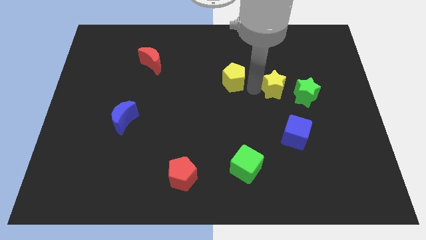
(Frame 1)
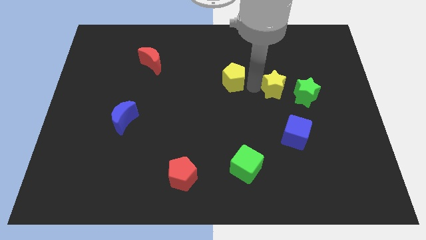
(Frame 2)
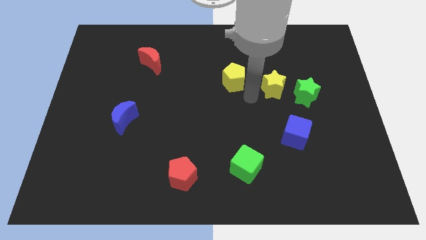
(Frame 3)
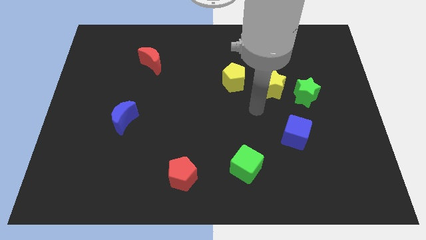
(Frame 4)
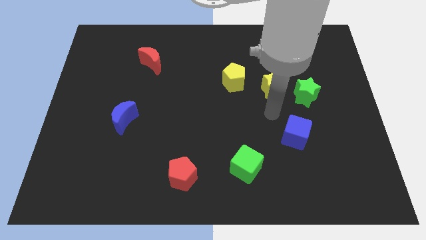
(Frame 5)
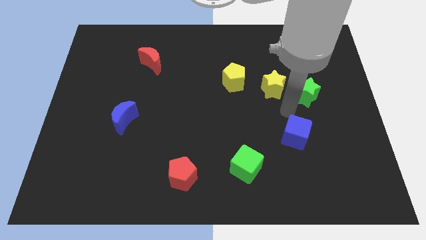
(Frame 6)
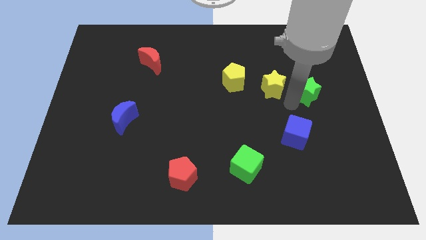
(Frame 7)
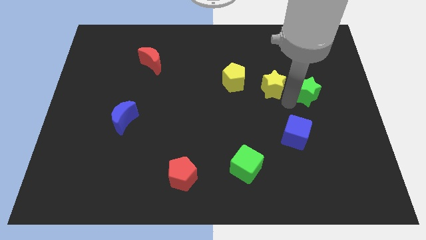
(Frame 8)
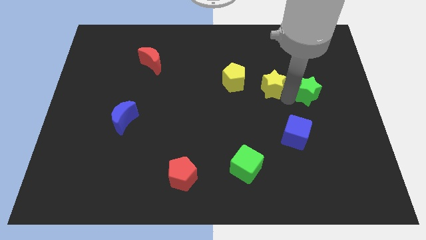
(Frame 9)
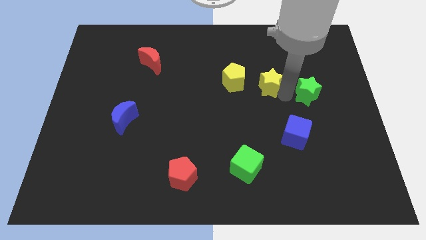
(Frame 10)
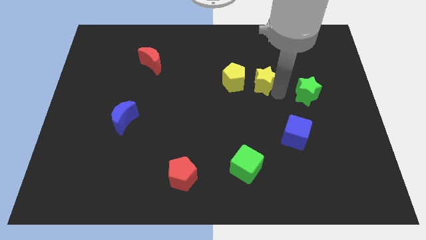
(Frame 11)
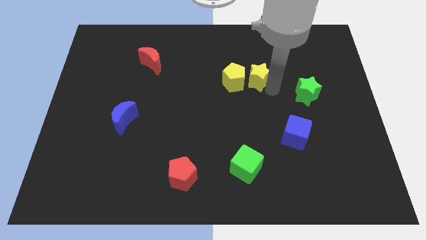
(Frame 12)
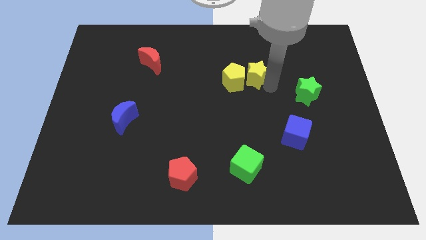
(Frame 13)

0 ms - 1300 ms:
push the yellow star horizontal to the right of the yellow pentagon

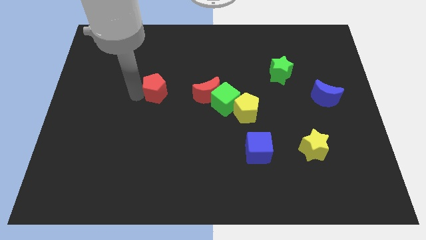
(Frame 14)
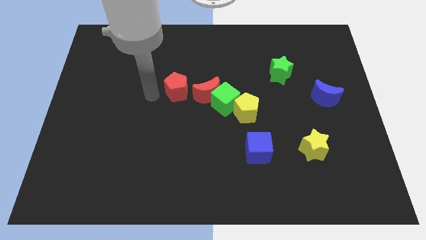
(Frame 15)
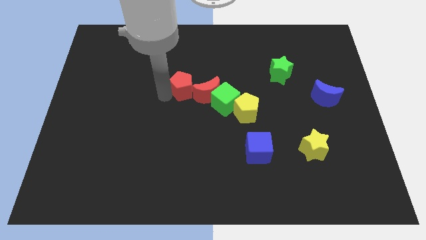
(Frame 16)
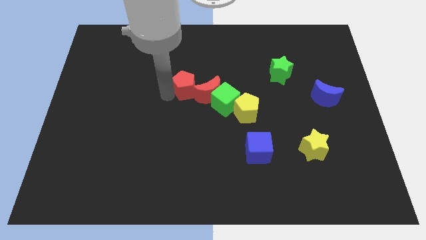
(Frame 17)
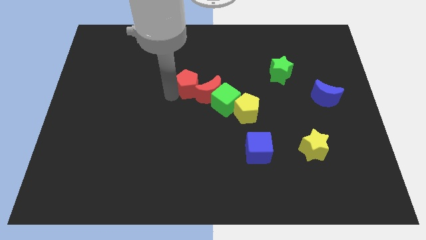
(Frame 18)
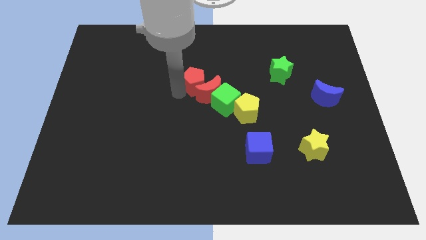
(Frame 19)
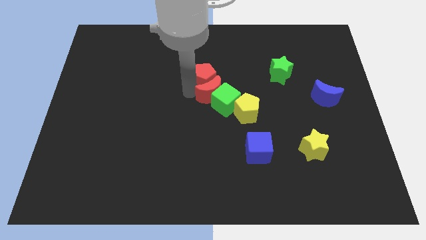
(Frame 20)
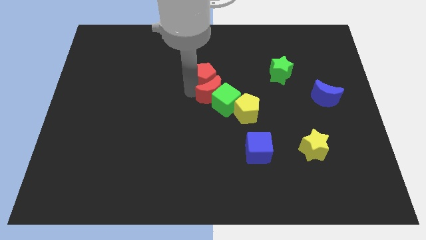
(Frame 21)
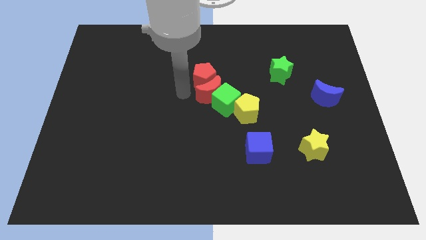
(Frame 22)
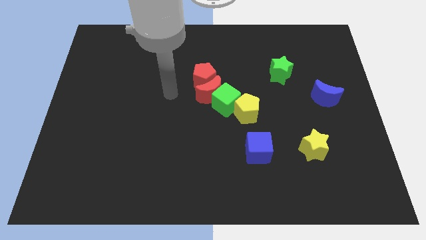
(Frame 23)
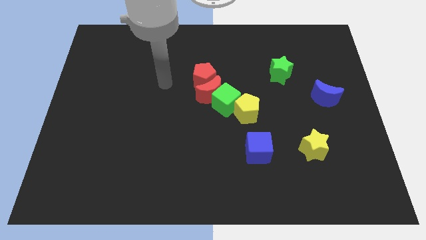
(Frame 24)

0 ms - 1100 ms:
place the red pentagon on top of the red crescent to form a diagnoal line

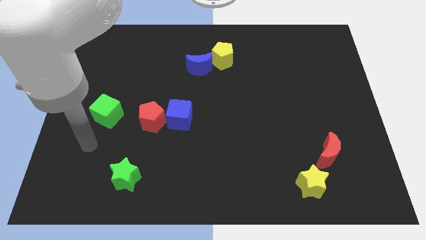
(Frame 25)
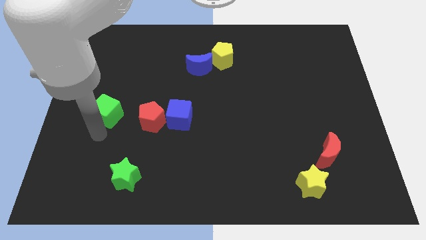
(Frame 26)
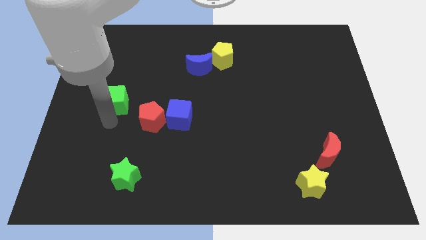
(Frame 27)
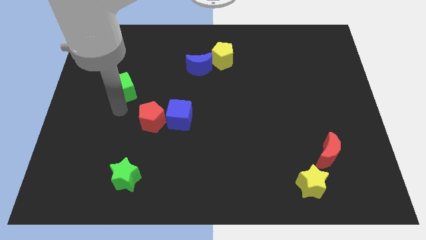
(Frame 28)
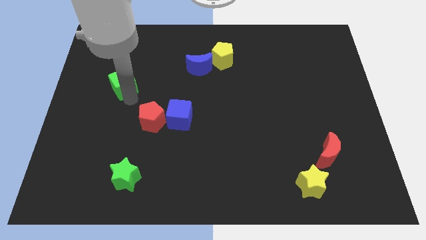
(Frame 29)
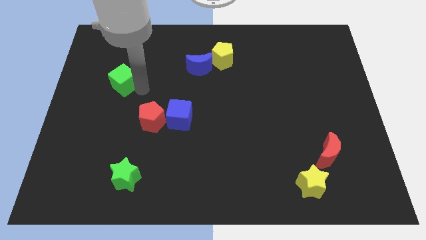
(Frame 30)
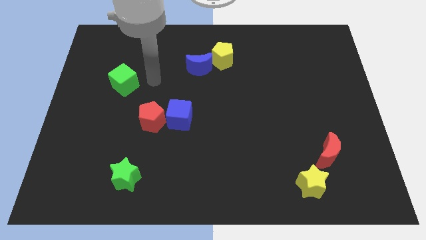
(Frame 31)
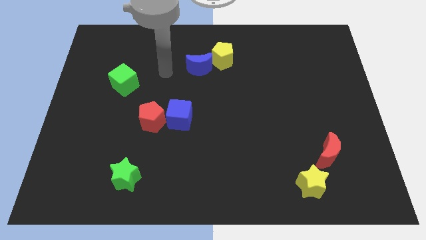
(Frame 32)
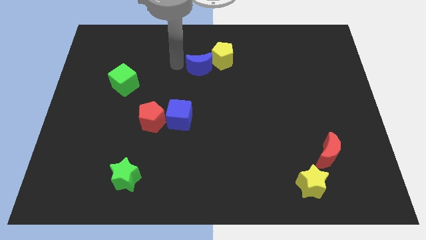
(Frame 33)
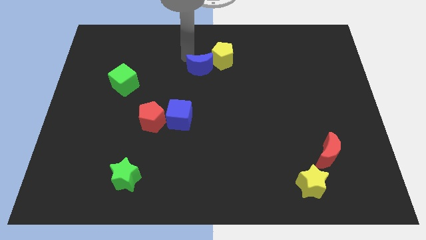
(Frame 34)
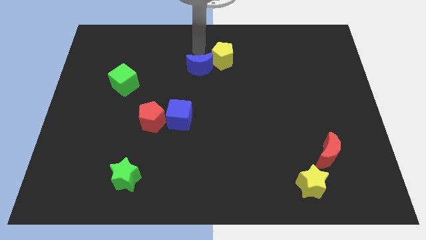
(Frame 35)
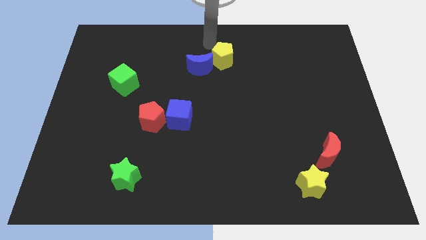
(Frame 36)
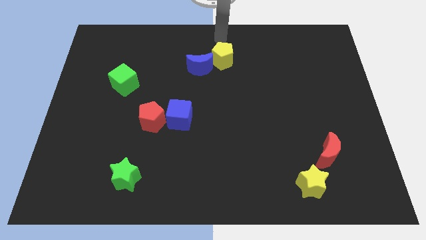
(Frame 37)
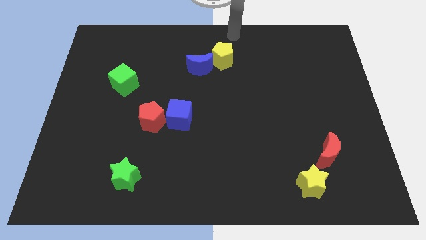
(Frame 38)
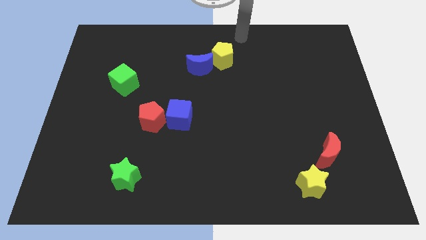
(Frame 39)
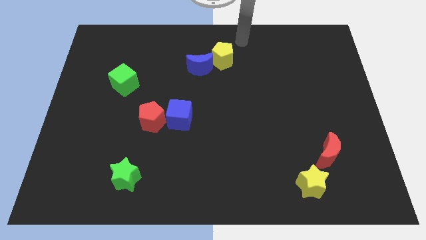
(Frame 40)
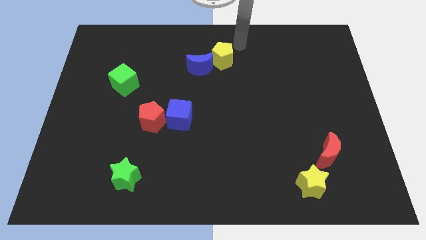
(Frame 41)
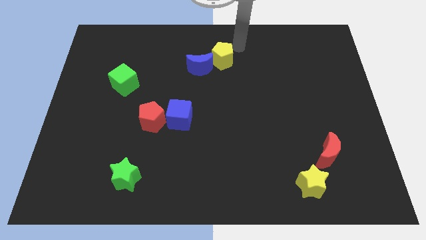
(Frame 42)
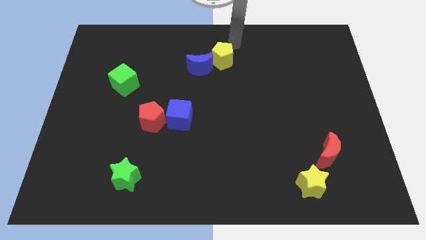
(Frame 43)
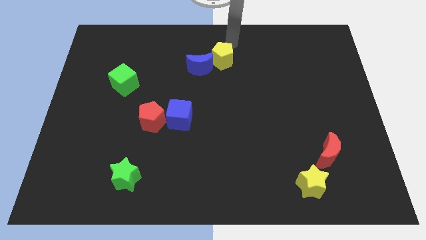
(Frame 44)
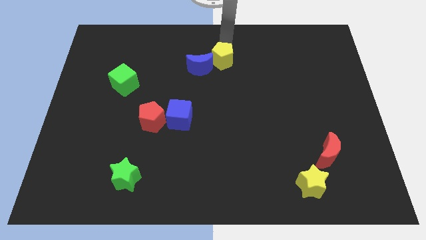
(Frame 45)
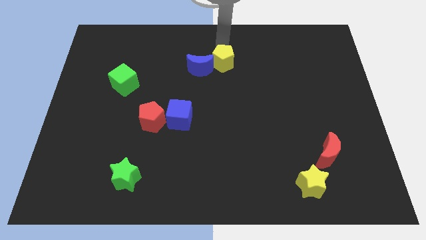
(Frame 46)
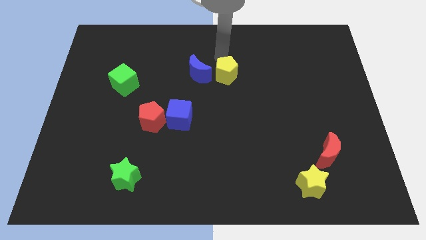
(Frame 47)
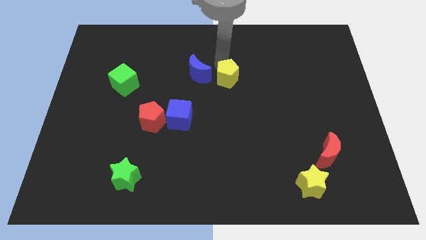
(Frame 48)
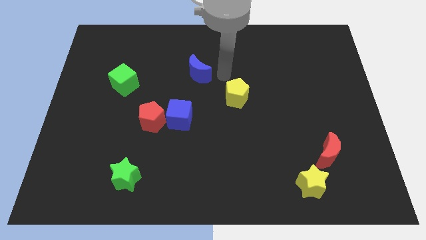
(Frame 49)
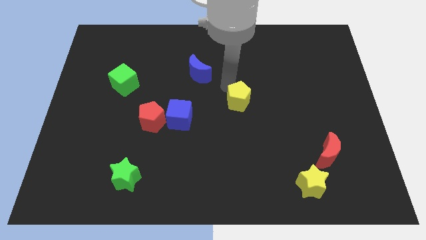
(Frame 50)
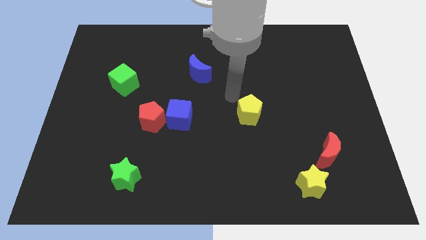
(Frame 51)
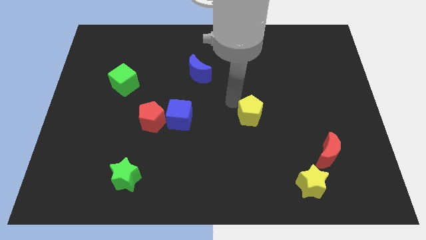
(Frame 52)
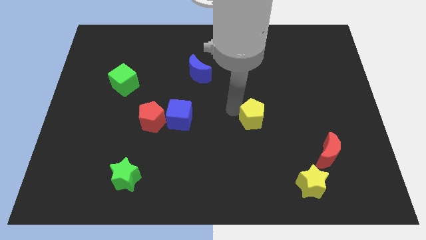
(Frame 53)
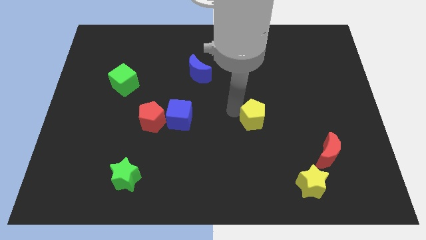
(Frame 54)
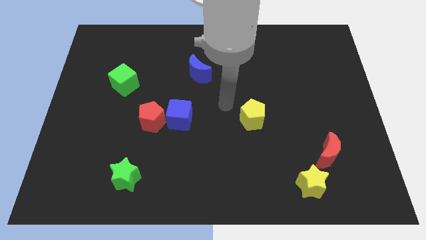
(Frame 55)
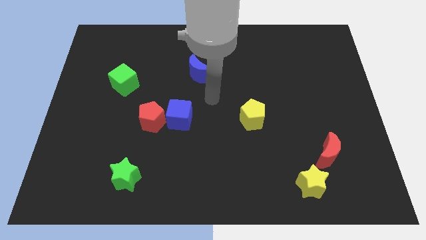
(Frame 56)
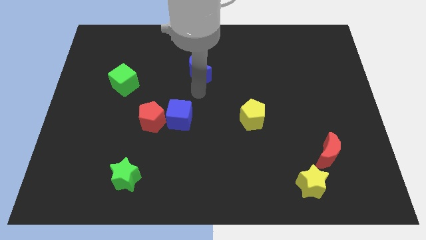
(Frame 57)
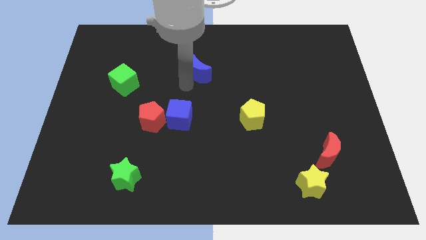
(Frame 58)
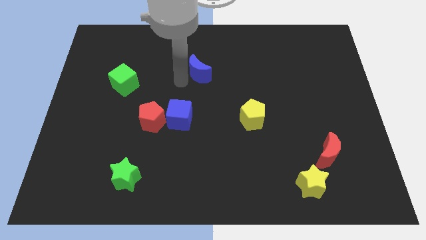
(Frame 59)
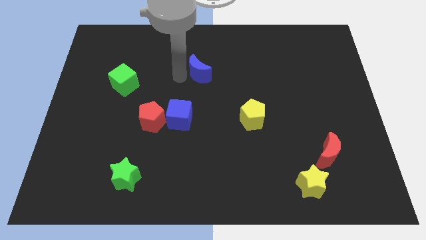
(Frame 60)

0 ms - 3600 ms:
move the yellow pentagon right to the blue cube

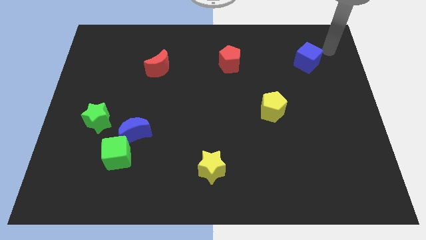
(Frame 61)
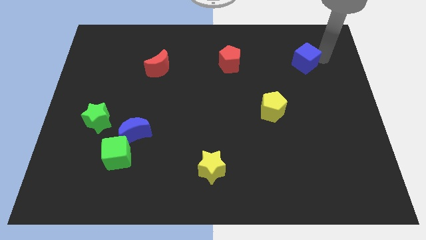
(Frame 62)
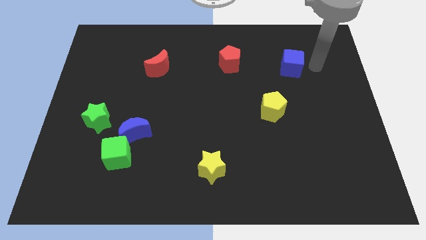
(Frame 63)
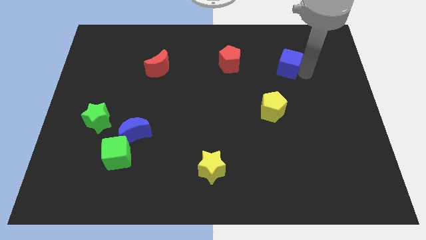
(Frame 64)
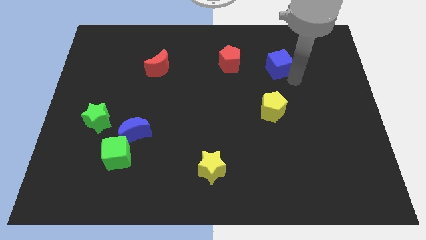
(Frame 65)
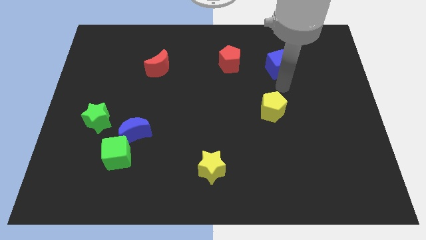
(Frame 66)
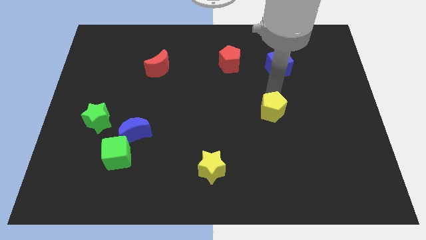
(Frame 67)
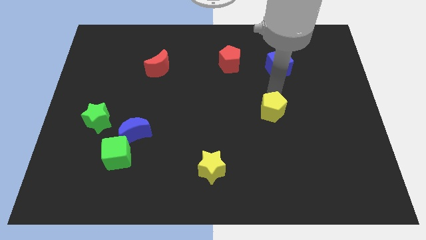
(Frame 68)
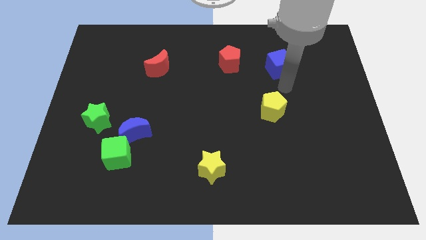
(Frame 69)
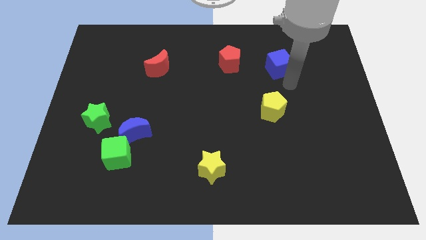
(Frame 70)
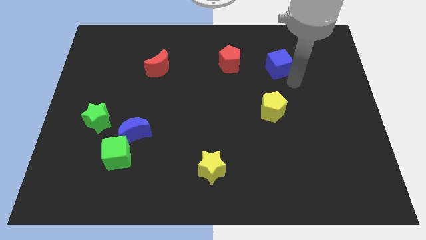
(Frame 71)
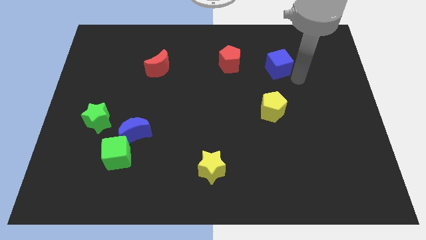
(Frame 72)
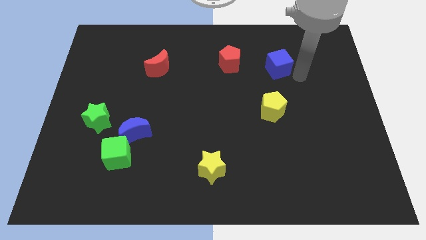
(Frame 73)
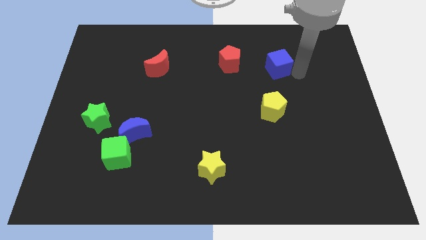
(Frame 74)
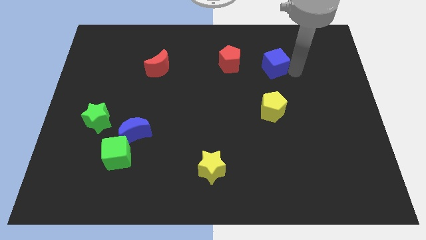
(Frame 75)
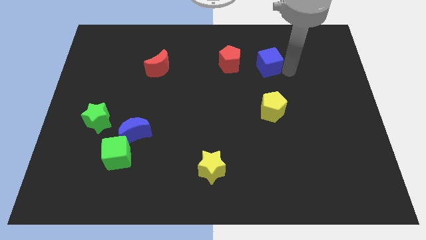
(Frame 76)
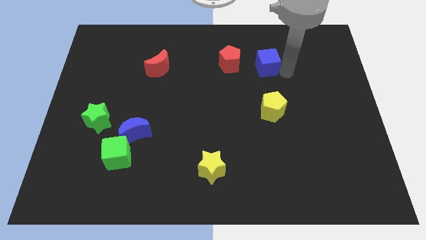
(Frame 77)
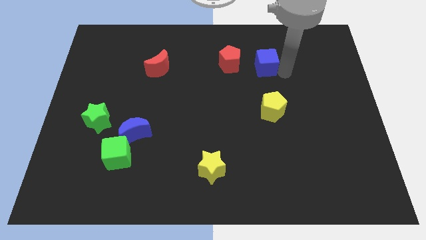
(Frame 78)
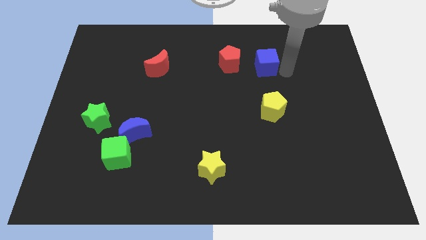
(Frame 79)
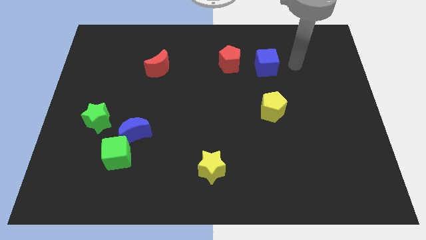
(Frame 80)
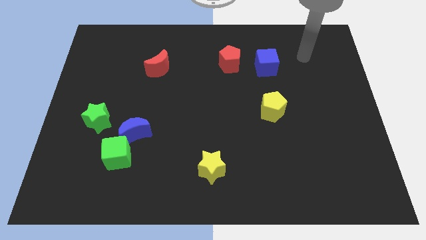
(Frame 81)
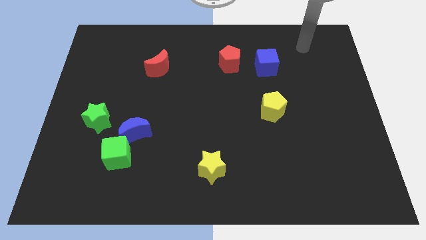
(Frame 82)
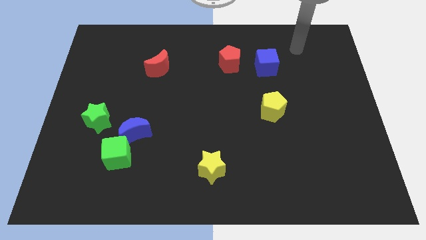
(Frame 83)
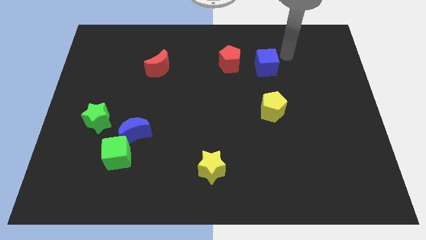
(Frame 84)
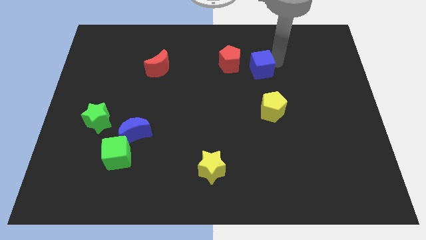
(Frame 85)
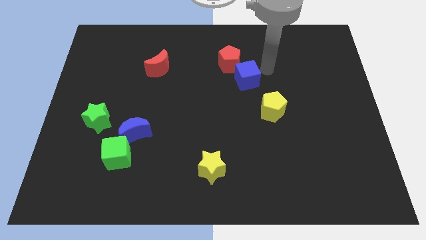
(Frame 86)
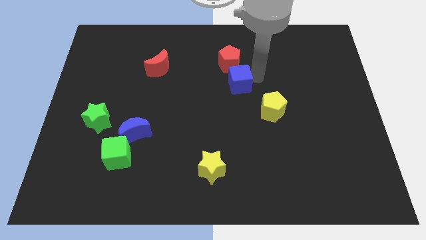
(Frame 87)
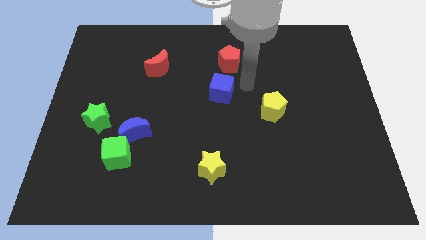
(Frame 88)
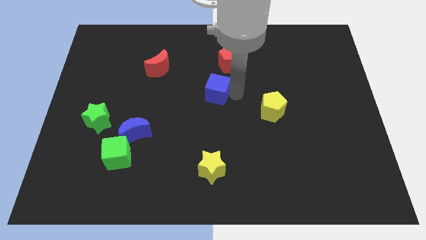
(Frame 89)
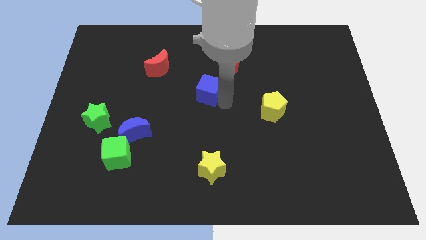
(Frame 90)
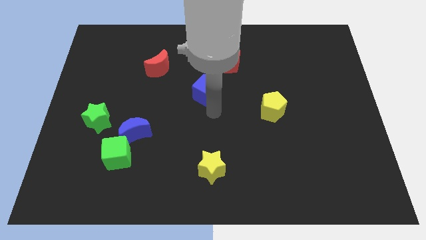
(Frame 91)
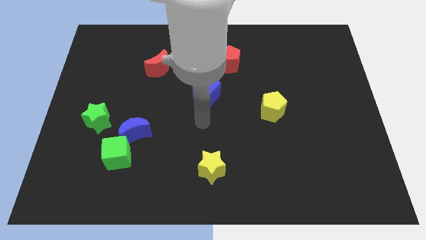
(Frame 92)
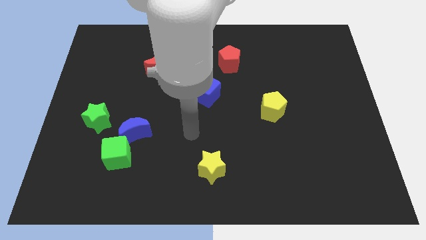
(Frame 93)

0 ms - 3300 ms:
put the blue cube above the yellow star
